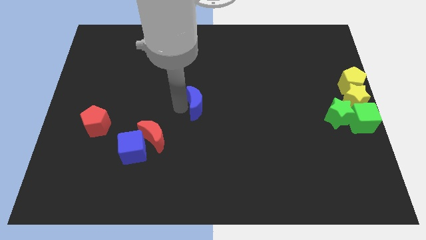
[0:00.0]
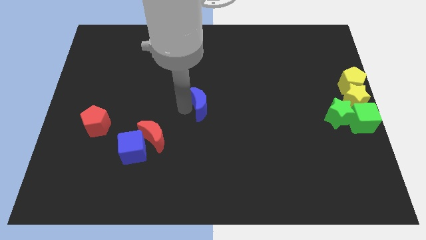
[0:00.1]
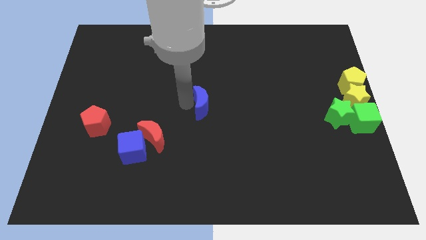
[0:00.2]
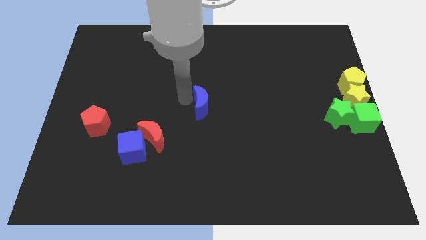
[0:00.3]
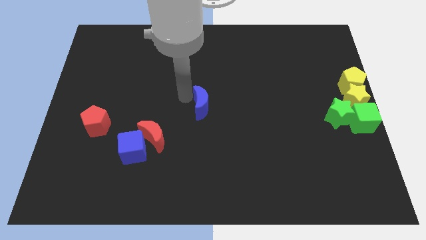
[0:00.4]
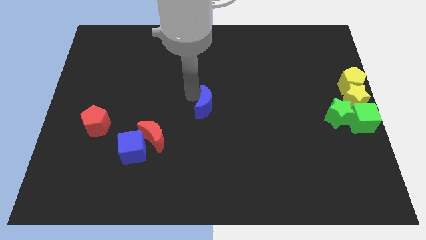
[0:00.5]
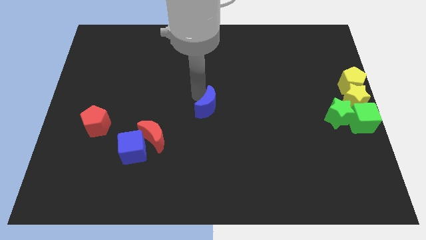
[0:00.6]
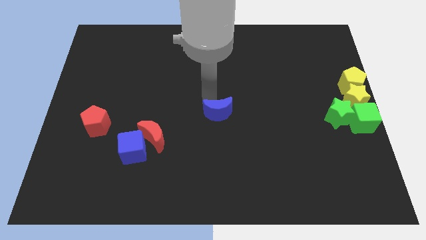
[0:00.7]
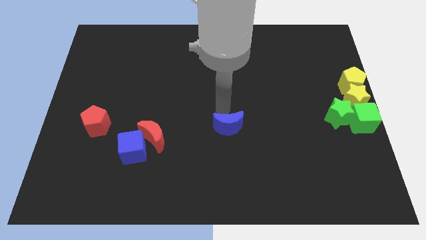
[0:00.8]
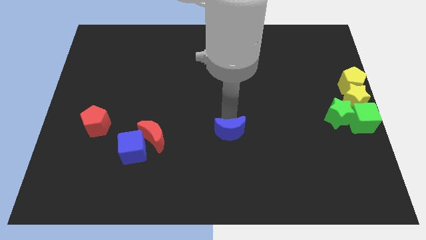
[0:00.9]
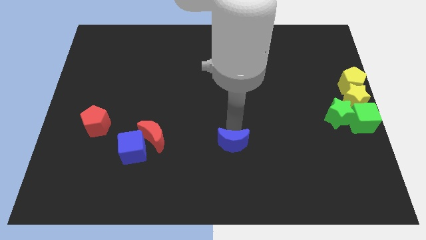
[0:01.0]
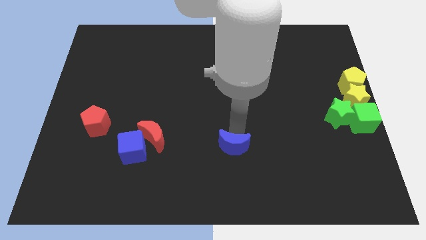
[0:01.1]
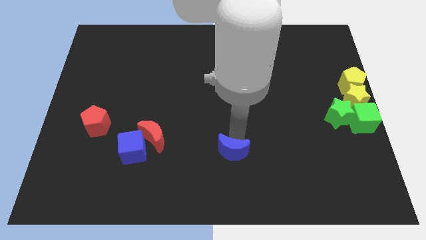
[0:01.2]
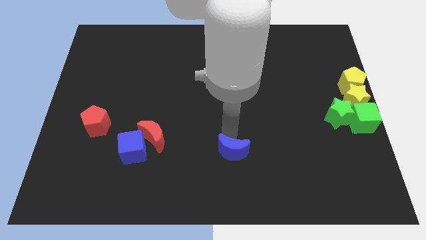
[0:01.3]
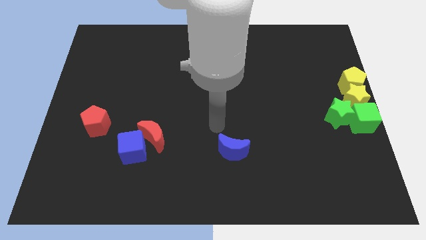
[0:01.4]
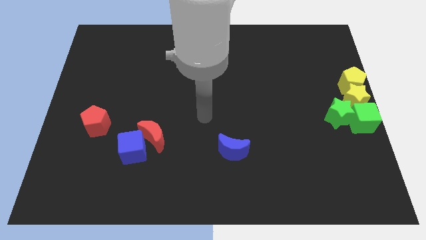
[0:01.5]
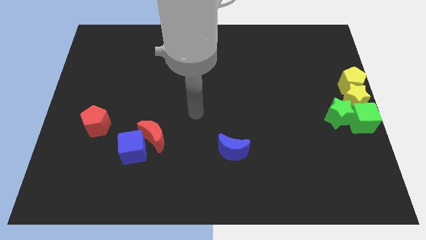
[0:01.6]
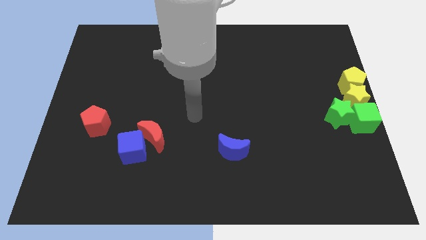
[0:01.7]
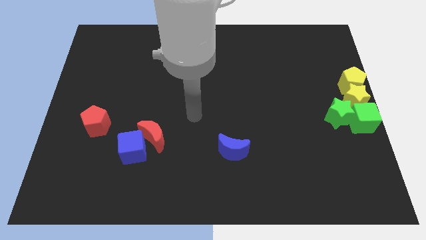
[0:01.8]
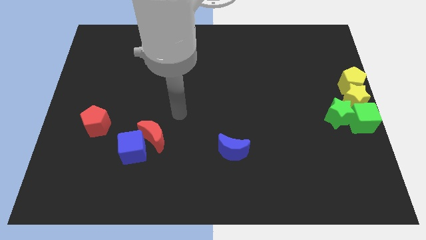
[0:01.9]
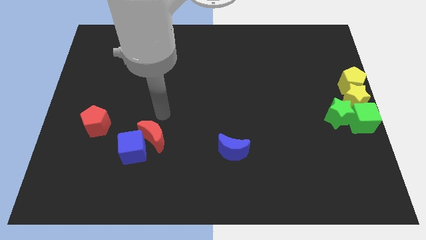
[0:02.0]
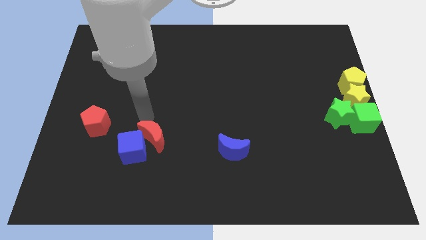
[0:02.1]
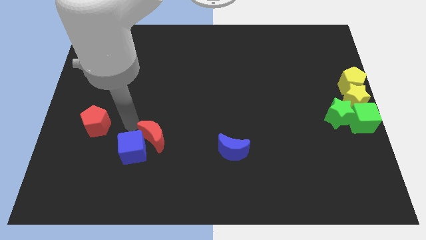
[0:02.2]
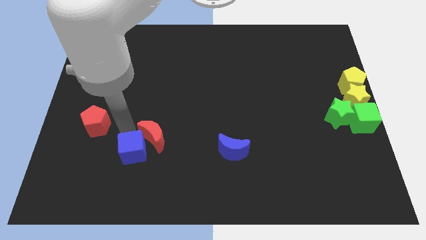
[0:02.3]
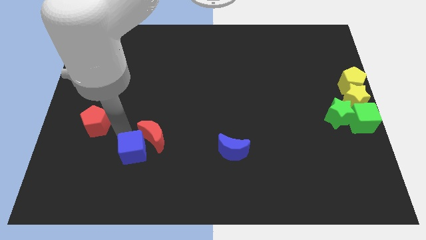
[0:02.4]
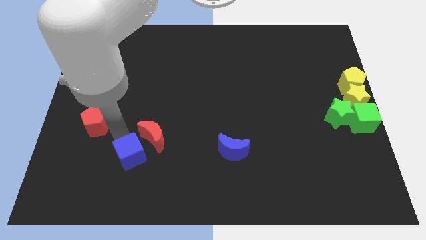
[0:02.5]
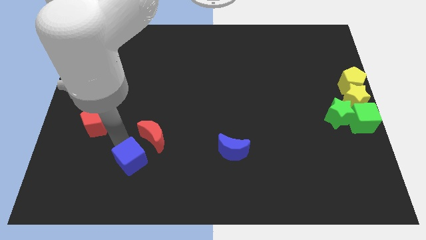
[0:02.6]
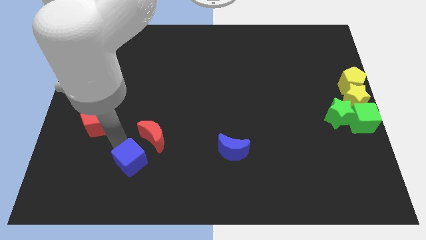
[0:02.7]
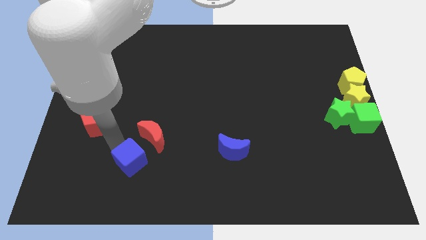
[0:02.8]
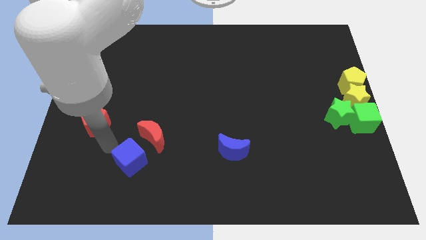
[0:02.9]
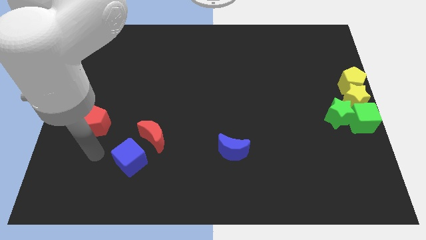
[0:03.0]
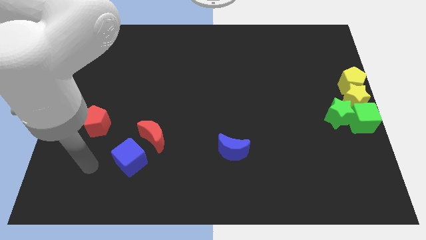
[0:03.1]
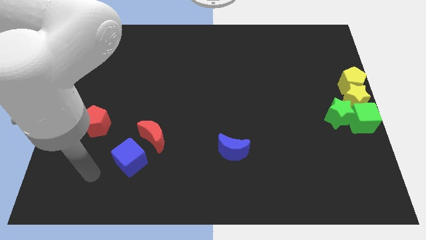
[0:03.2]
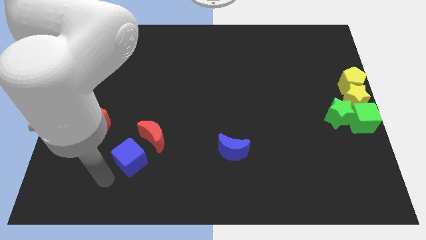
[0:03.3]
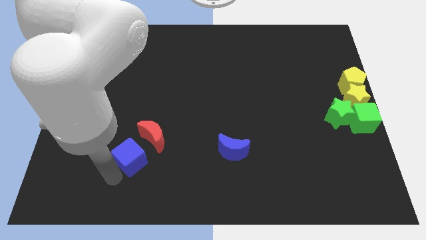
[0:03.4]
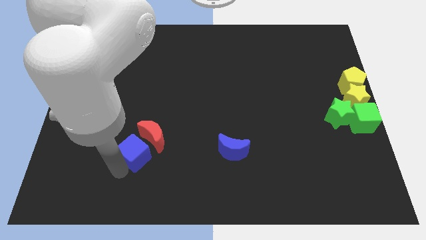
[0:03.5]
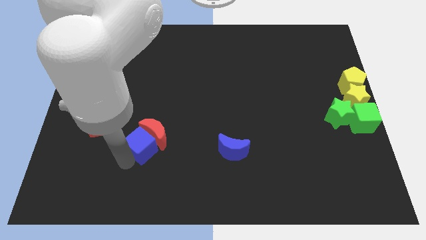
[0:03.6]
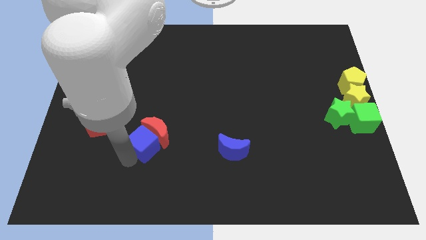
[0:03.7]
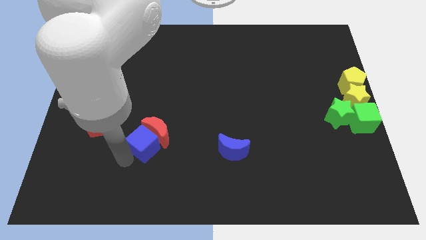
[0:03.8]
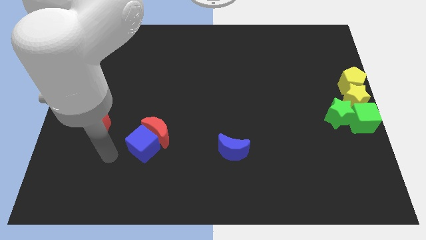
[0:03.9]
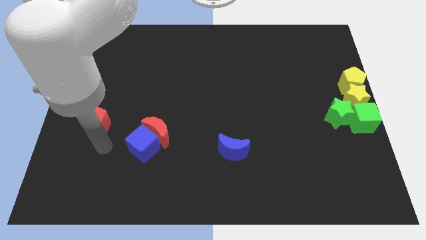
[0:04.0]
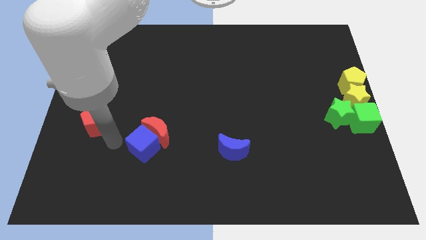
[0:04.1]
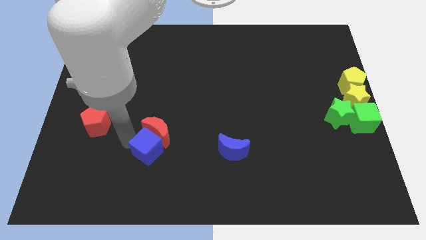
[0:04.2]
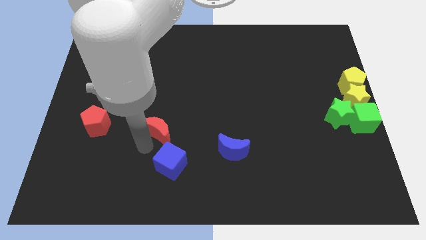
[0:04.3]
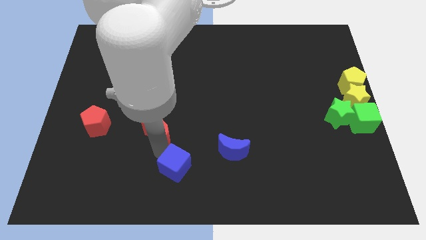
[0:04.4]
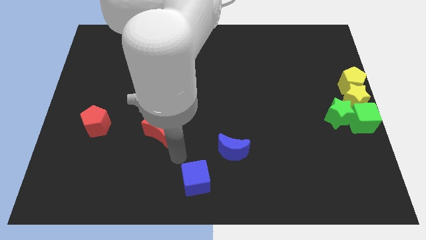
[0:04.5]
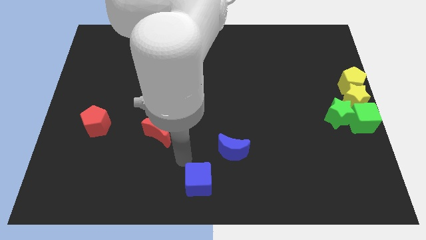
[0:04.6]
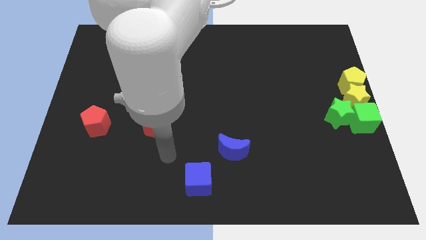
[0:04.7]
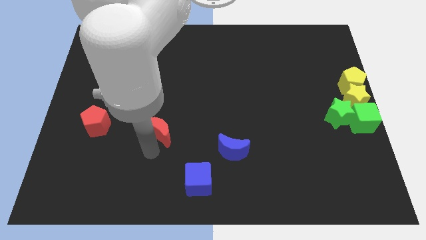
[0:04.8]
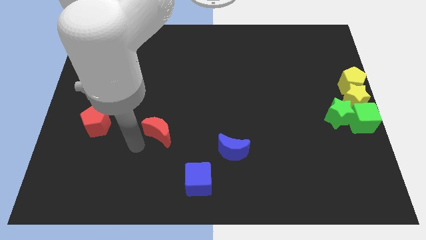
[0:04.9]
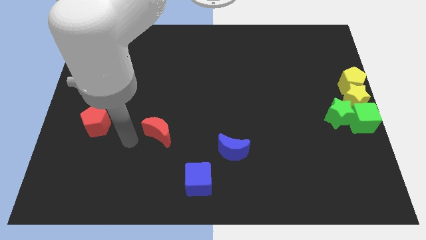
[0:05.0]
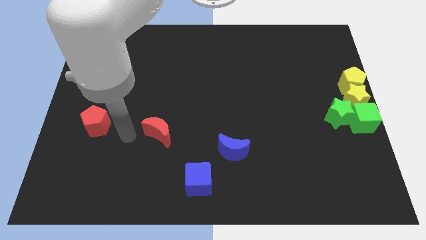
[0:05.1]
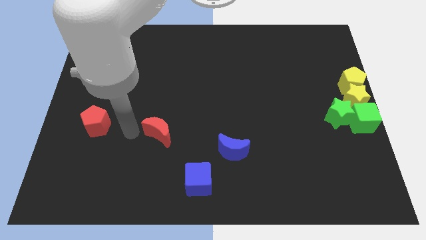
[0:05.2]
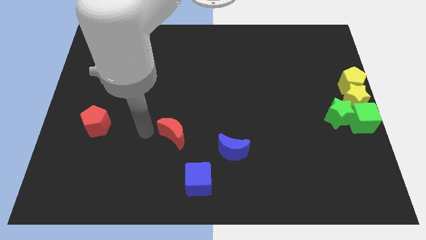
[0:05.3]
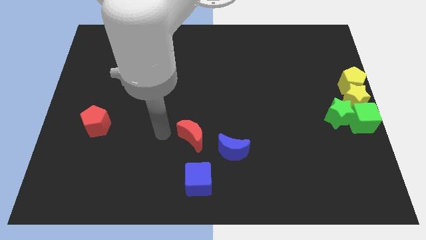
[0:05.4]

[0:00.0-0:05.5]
make a triangle with the blue blocks and red moon at the bottom center of the board

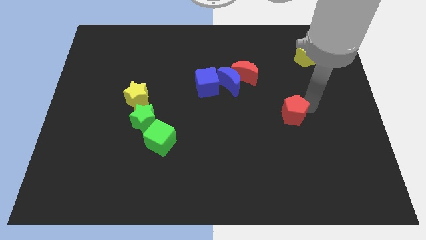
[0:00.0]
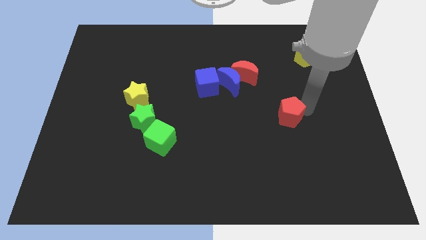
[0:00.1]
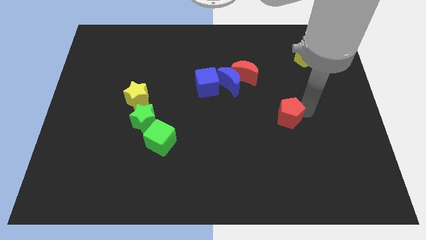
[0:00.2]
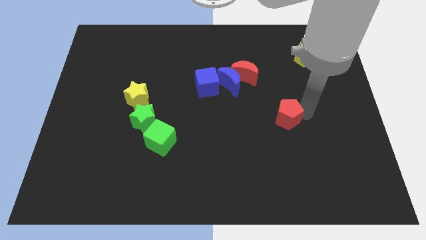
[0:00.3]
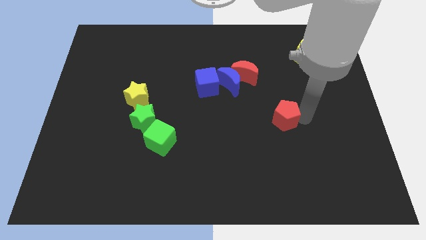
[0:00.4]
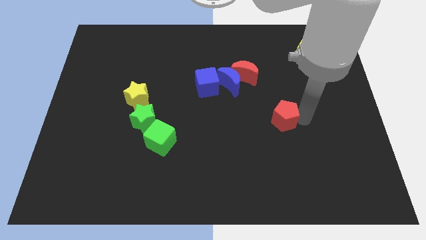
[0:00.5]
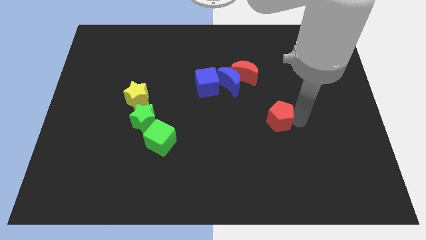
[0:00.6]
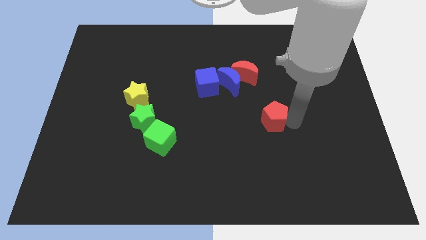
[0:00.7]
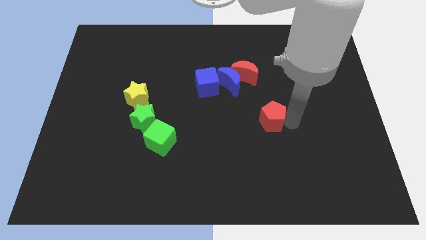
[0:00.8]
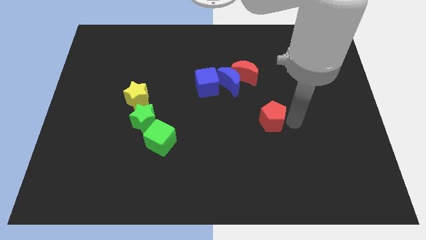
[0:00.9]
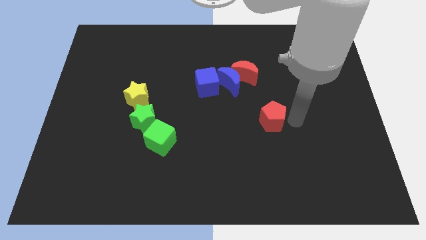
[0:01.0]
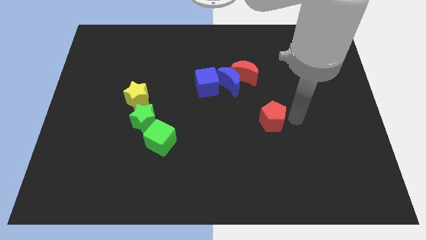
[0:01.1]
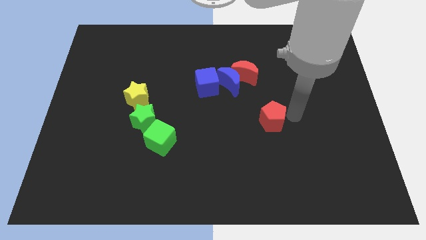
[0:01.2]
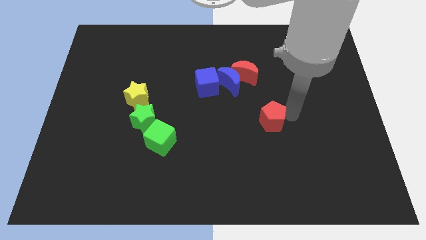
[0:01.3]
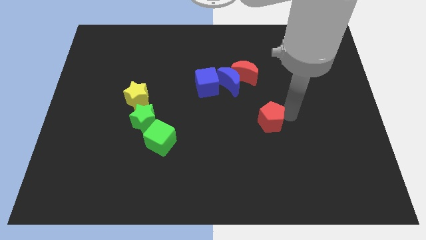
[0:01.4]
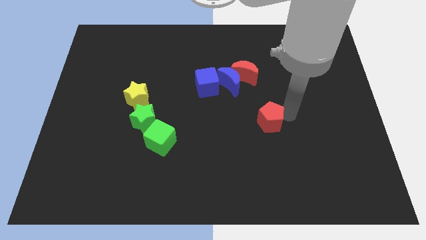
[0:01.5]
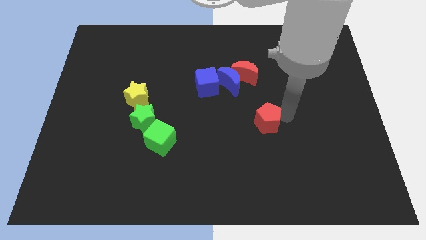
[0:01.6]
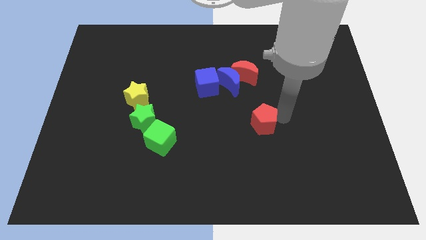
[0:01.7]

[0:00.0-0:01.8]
move the red pentagon to the center

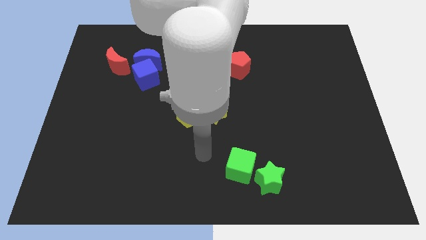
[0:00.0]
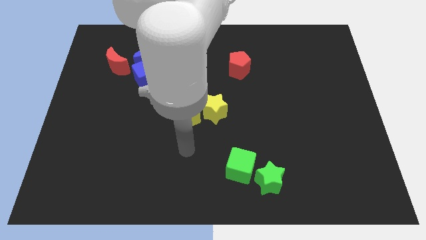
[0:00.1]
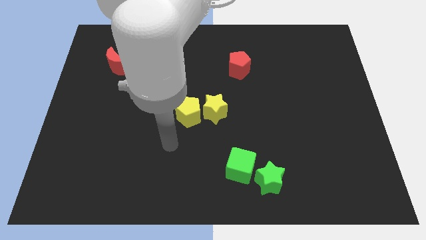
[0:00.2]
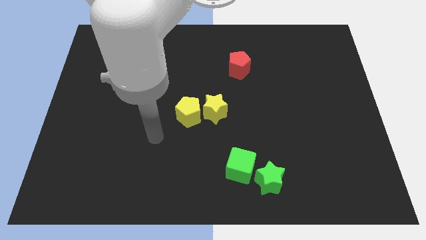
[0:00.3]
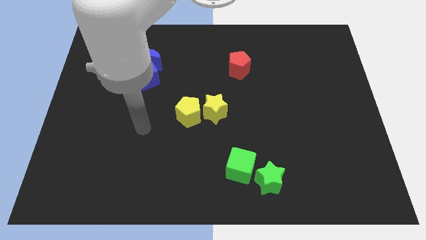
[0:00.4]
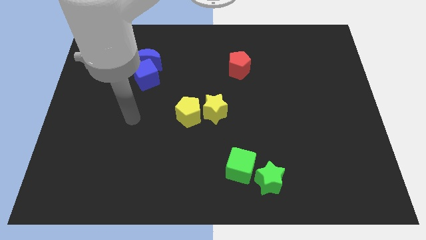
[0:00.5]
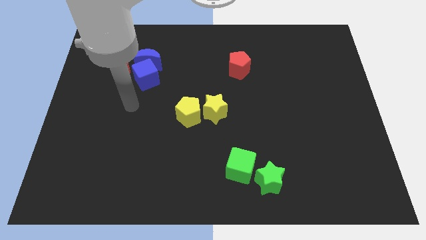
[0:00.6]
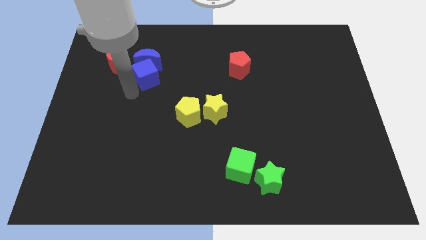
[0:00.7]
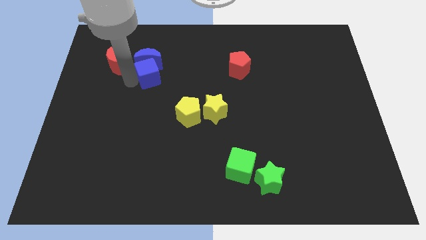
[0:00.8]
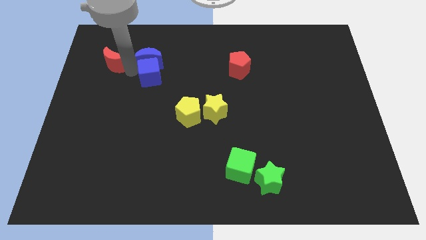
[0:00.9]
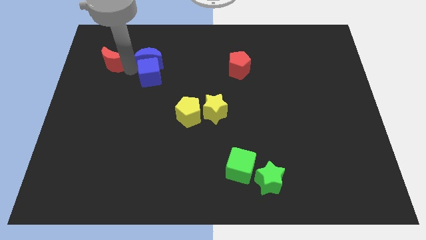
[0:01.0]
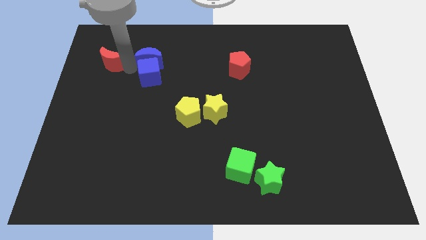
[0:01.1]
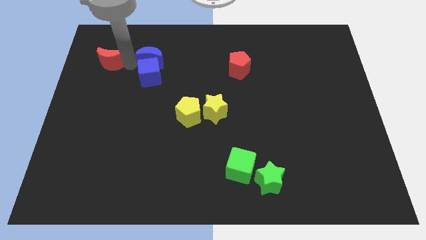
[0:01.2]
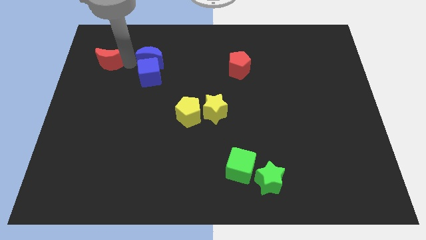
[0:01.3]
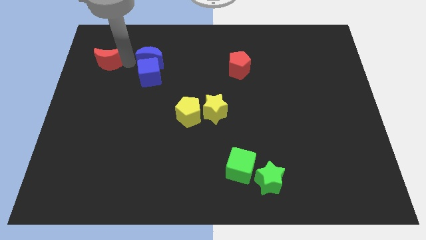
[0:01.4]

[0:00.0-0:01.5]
point your arm in between the red crescent and blue crescent

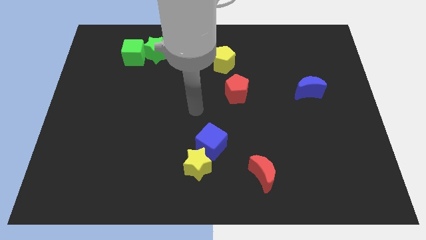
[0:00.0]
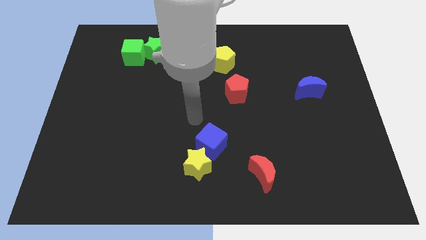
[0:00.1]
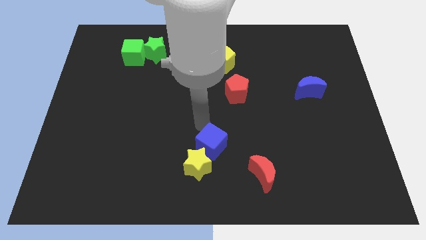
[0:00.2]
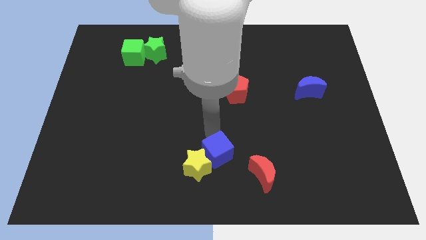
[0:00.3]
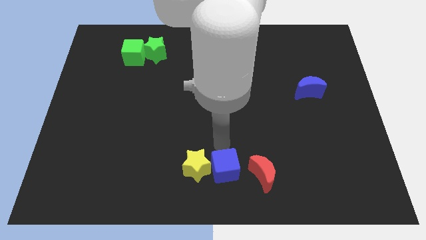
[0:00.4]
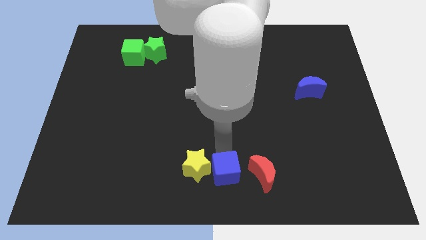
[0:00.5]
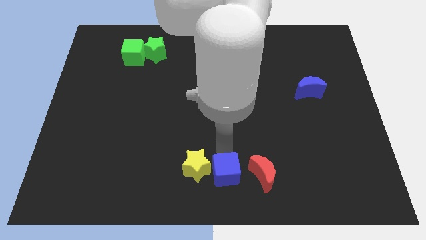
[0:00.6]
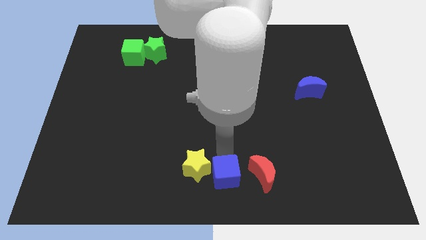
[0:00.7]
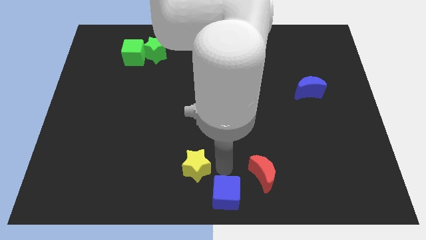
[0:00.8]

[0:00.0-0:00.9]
slide blue cube in between yellow star and red crescent
